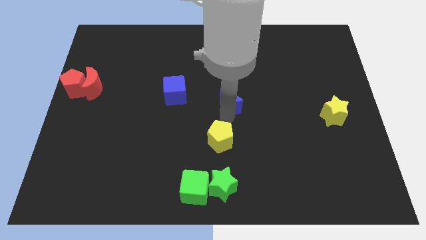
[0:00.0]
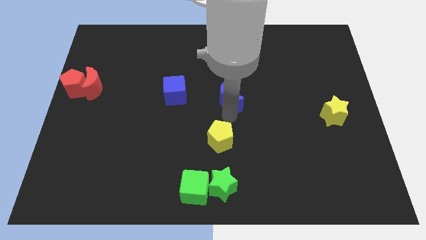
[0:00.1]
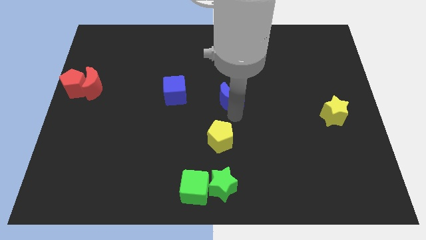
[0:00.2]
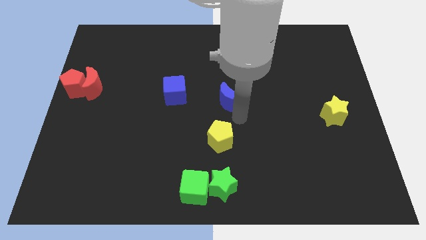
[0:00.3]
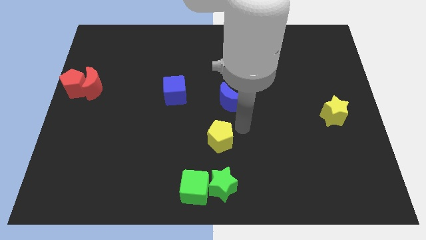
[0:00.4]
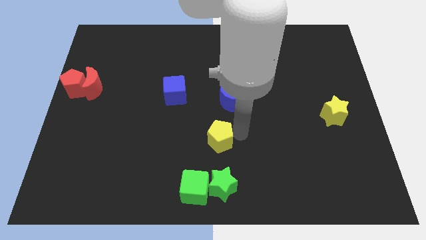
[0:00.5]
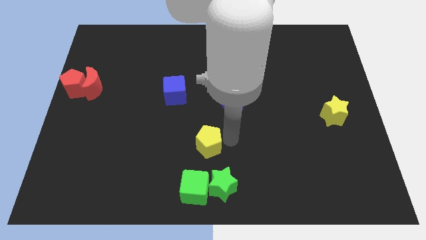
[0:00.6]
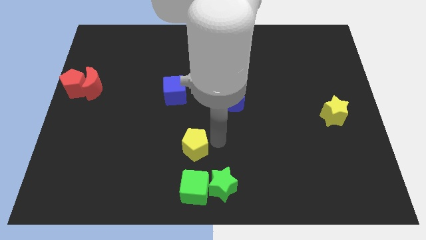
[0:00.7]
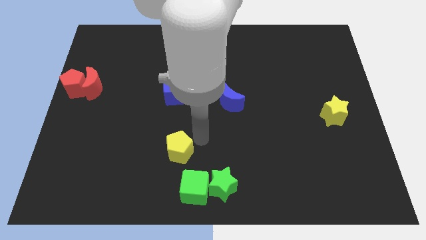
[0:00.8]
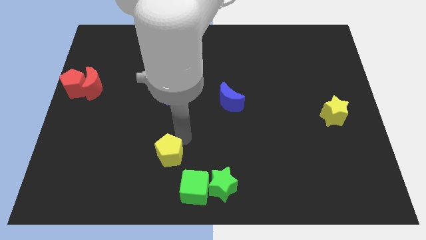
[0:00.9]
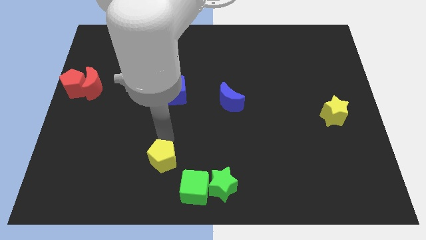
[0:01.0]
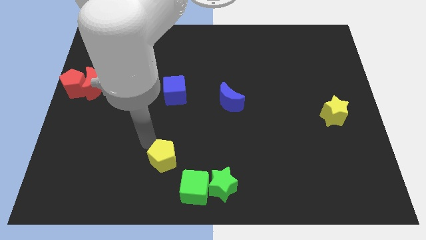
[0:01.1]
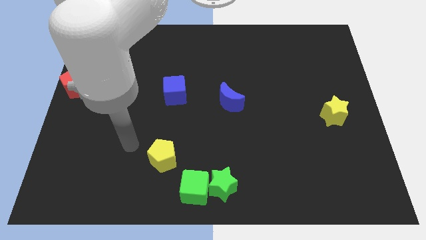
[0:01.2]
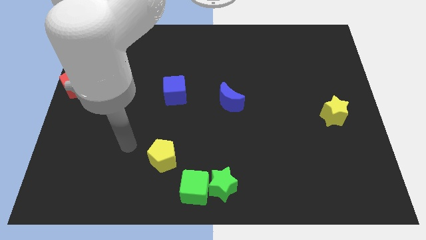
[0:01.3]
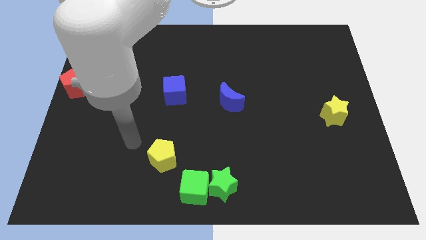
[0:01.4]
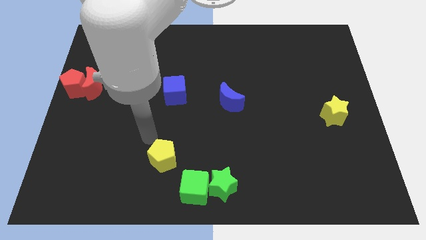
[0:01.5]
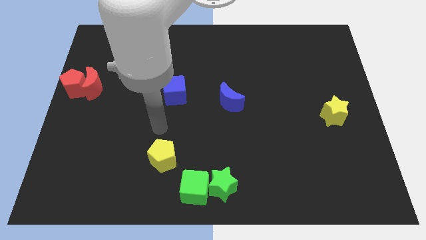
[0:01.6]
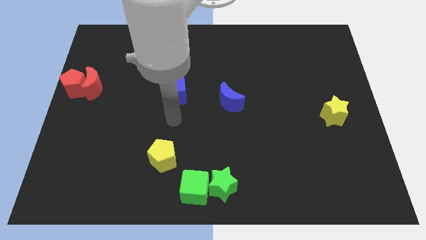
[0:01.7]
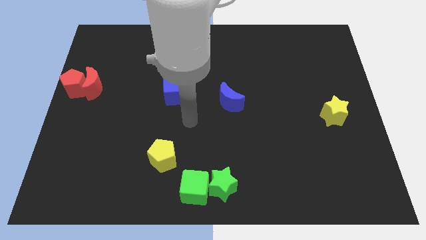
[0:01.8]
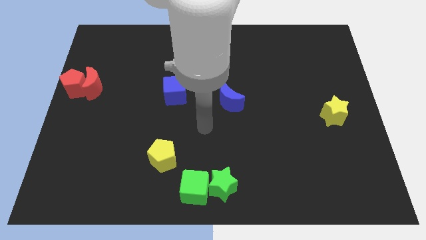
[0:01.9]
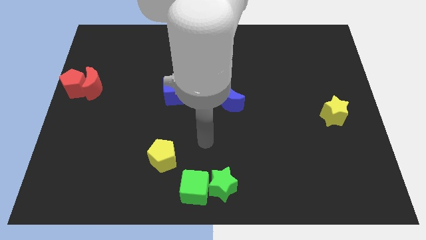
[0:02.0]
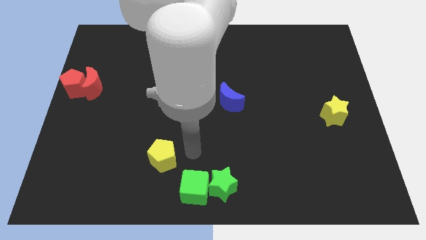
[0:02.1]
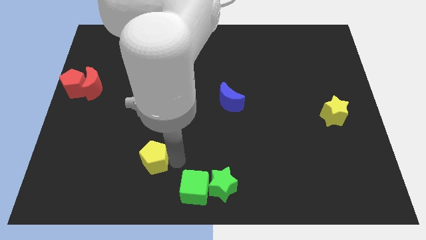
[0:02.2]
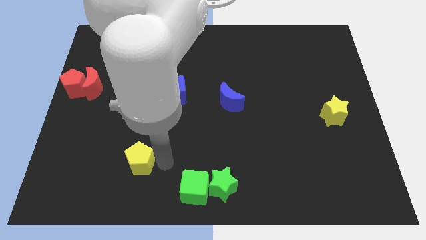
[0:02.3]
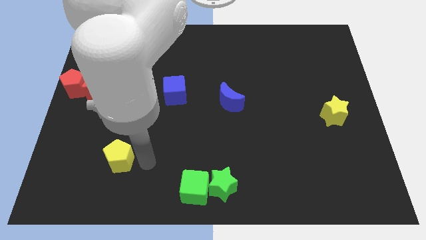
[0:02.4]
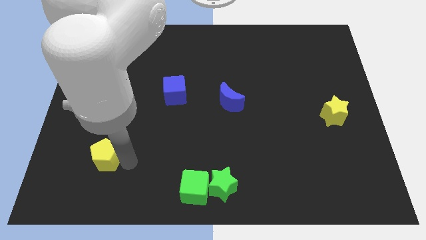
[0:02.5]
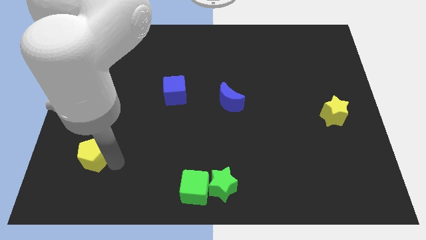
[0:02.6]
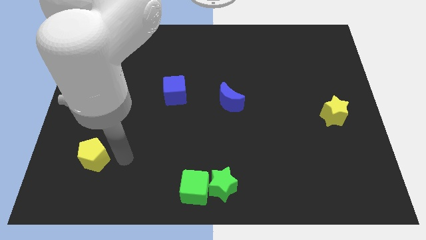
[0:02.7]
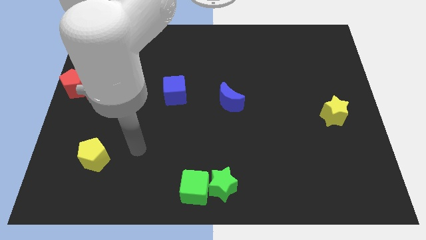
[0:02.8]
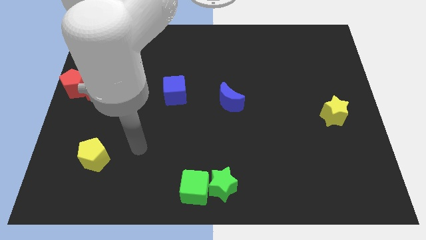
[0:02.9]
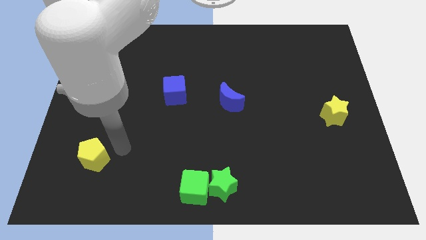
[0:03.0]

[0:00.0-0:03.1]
place the yellow pentagon below the red moon

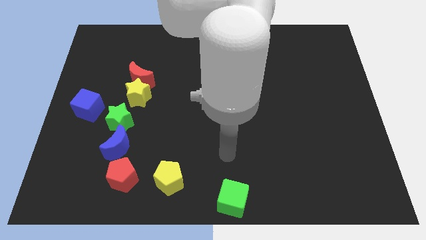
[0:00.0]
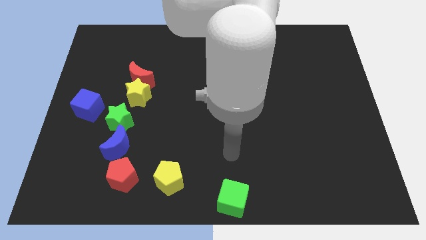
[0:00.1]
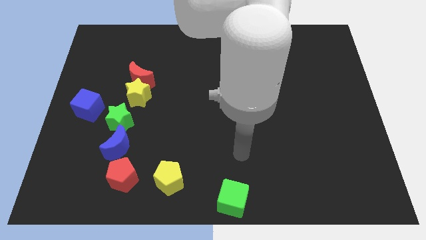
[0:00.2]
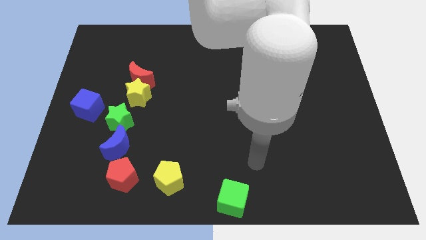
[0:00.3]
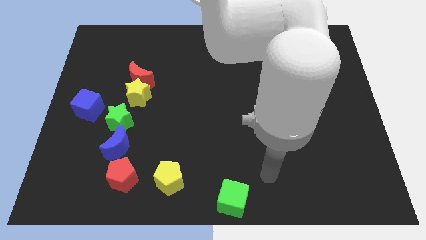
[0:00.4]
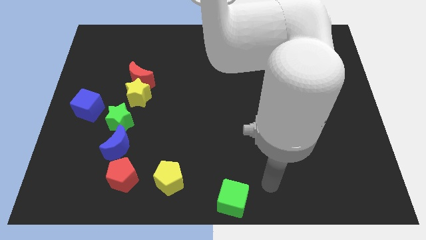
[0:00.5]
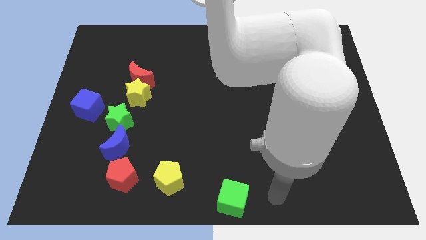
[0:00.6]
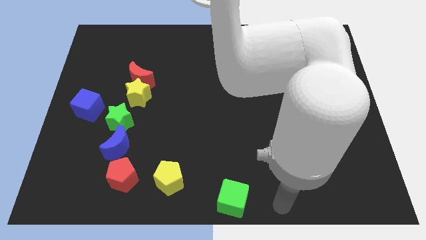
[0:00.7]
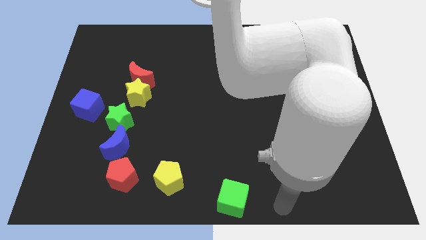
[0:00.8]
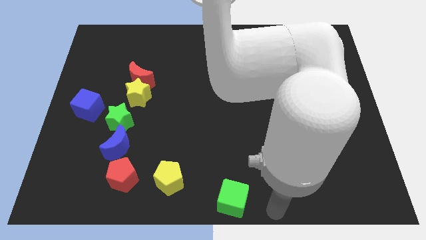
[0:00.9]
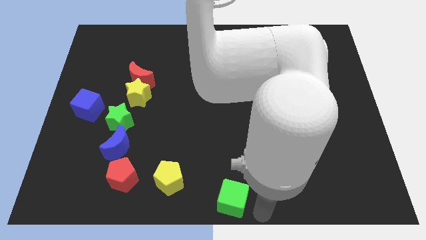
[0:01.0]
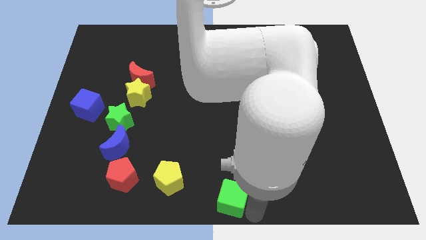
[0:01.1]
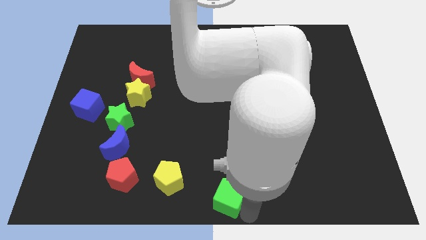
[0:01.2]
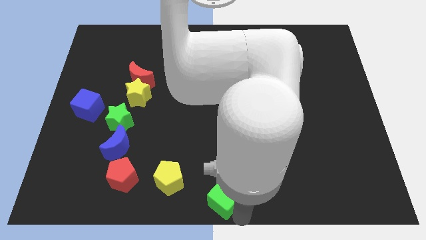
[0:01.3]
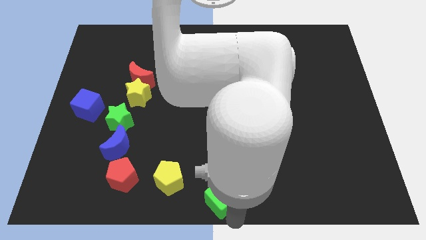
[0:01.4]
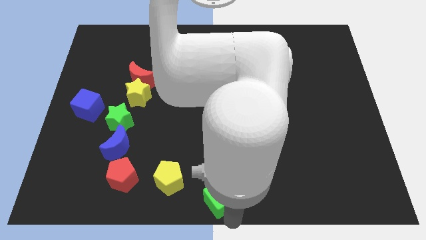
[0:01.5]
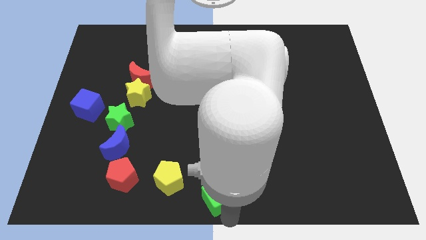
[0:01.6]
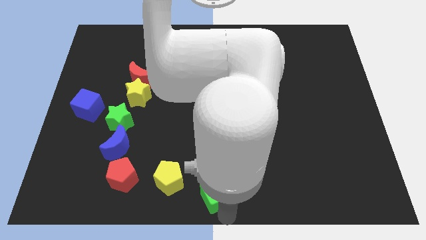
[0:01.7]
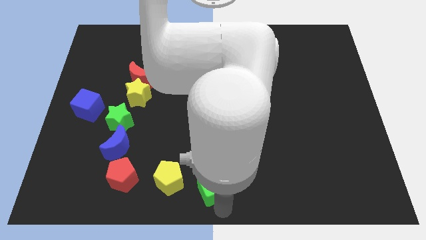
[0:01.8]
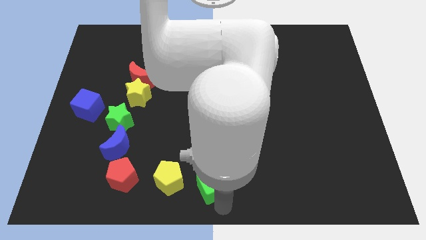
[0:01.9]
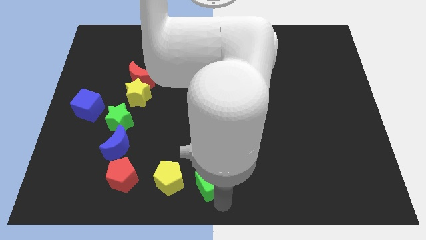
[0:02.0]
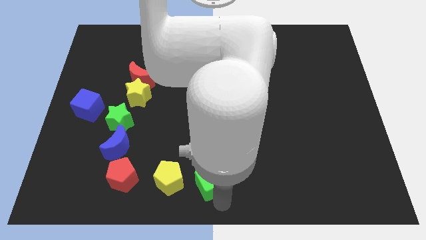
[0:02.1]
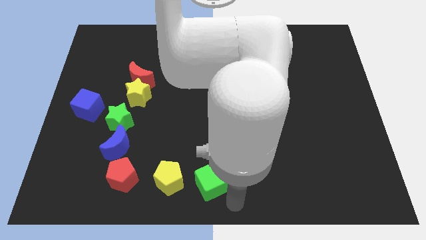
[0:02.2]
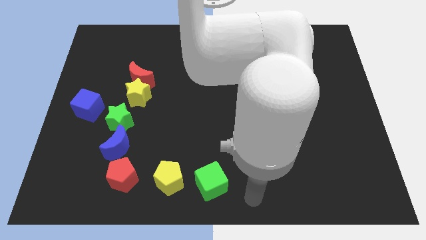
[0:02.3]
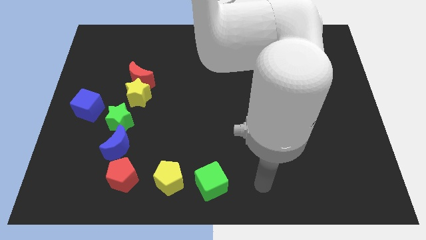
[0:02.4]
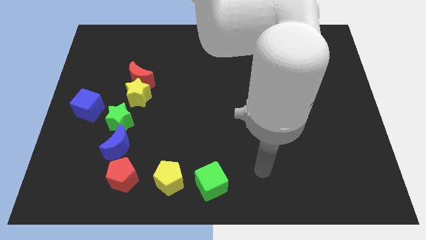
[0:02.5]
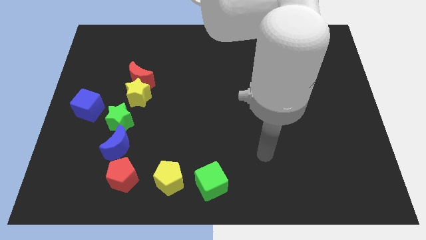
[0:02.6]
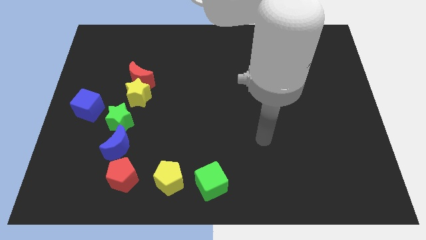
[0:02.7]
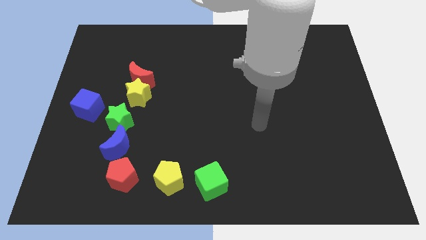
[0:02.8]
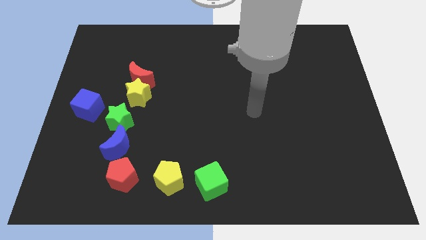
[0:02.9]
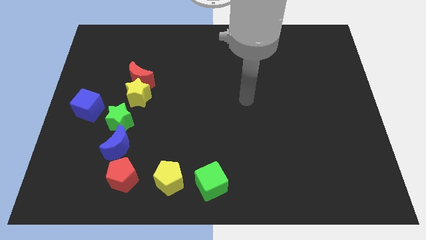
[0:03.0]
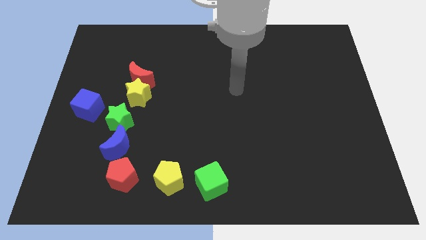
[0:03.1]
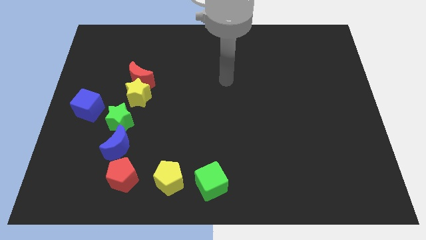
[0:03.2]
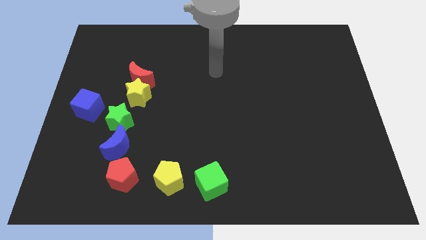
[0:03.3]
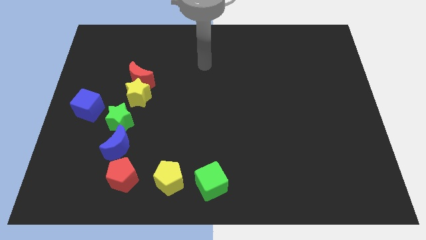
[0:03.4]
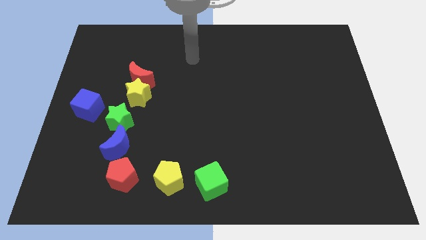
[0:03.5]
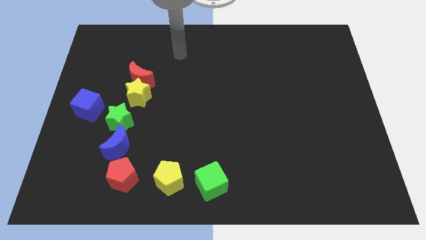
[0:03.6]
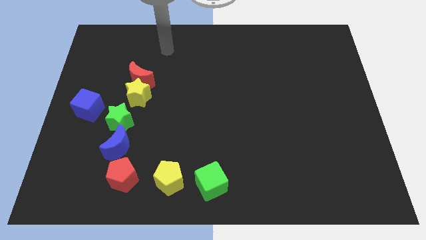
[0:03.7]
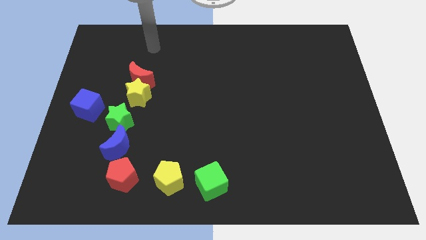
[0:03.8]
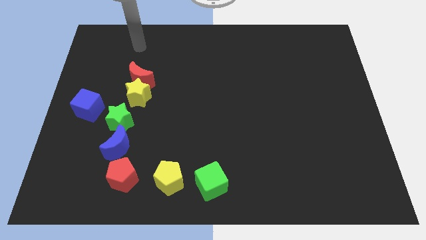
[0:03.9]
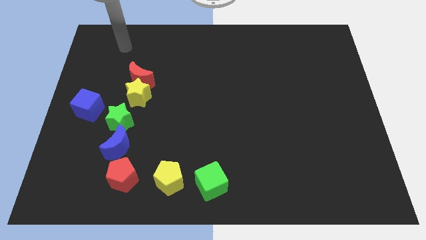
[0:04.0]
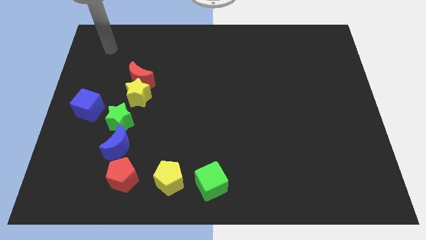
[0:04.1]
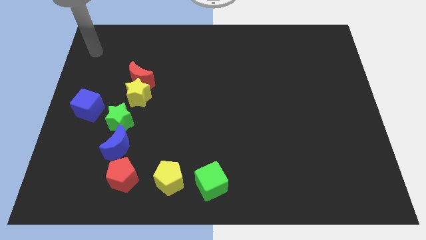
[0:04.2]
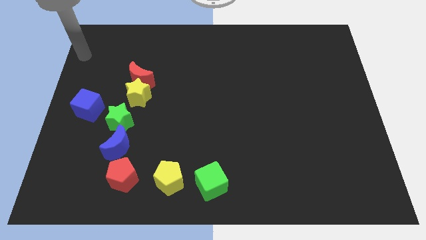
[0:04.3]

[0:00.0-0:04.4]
place the green cube close to yellow pentagon

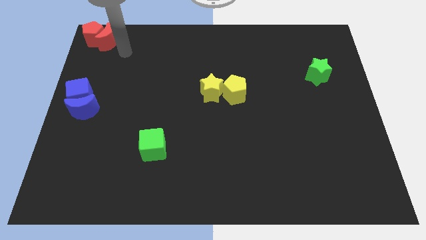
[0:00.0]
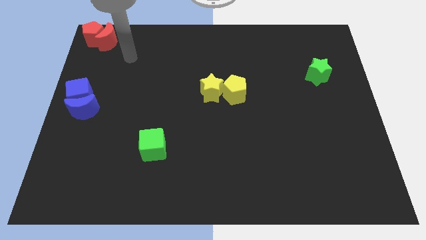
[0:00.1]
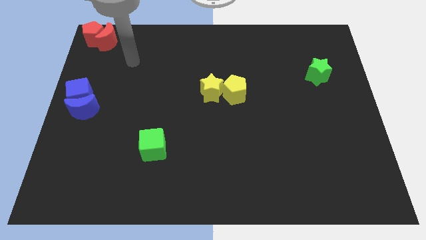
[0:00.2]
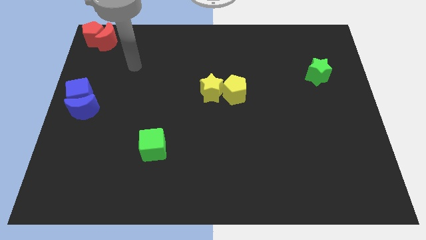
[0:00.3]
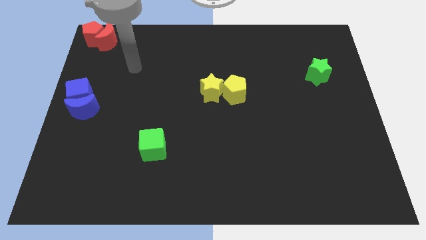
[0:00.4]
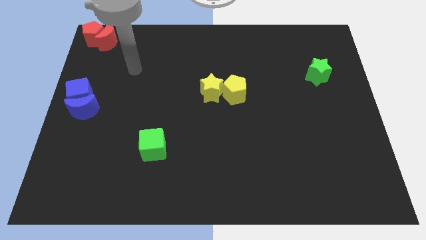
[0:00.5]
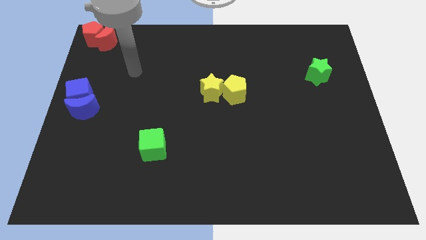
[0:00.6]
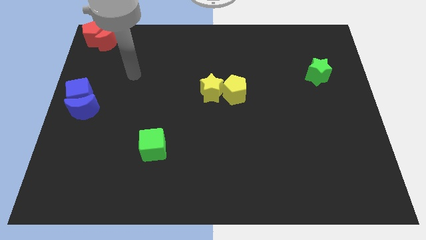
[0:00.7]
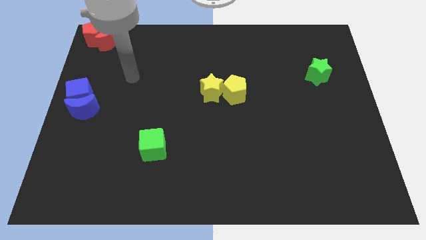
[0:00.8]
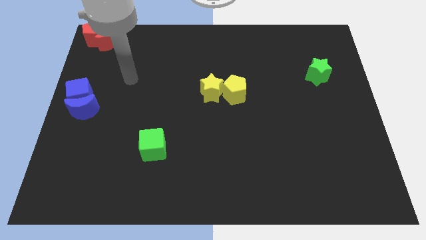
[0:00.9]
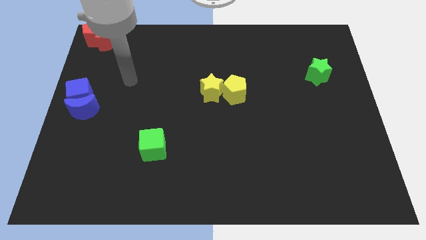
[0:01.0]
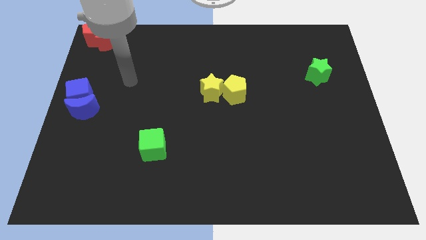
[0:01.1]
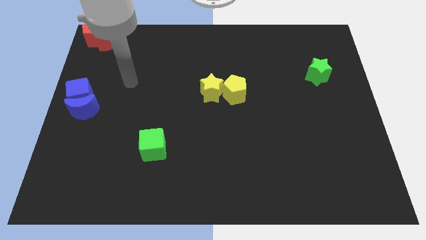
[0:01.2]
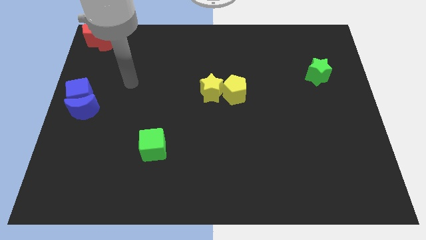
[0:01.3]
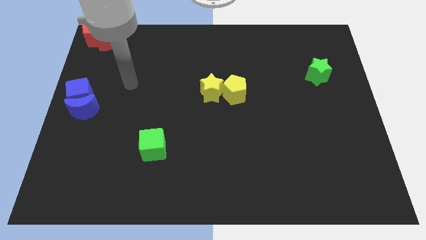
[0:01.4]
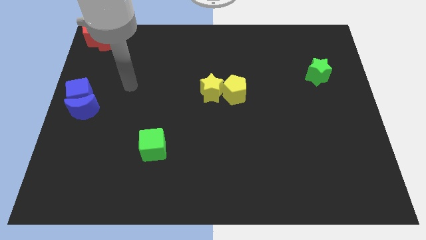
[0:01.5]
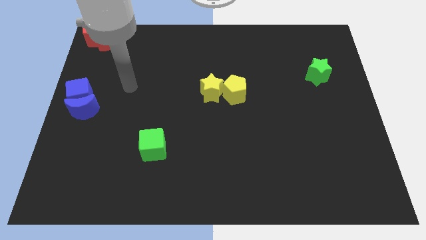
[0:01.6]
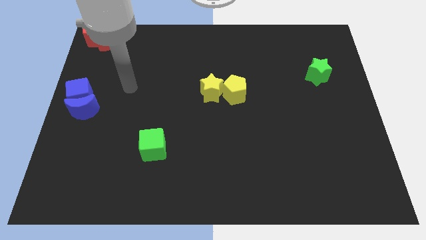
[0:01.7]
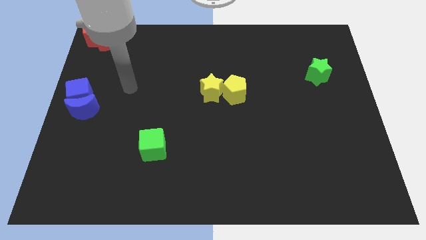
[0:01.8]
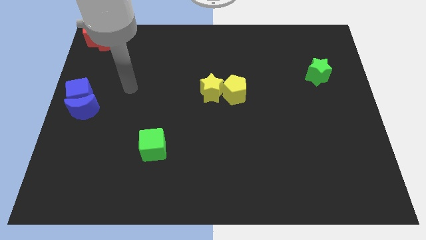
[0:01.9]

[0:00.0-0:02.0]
move your arm towards the right of blue cube
